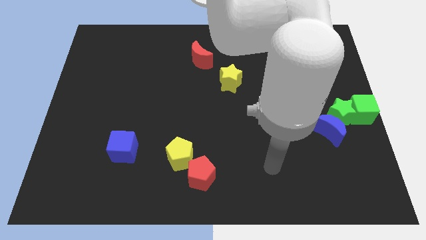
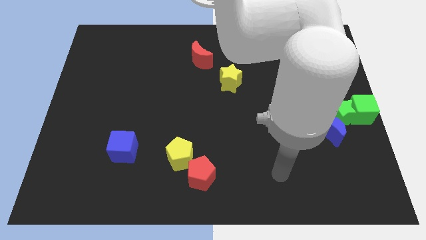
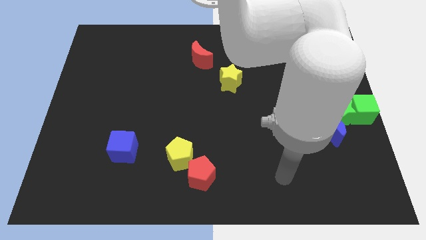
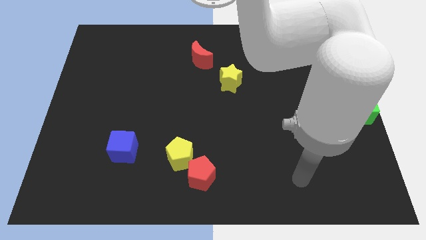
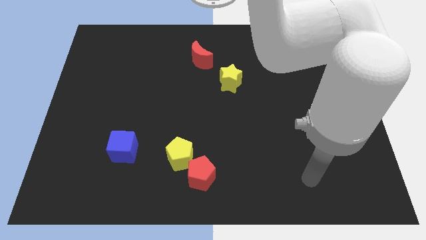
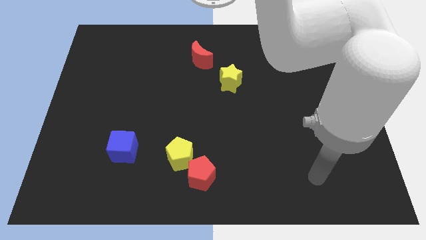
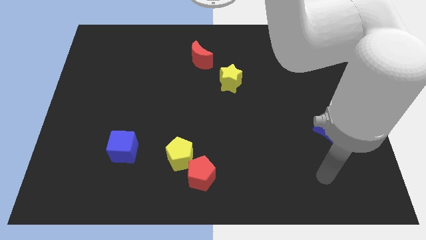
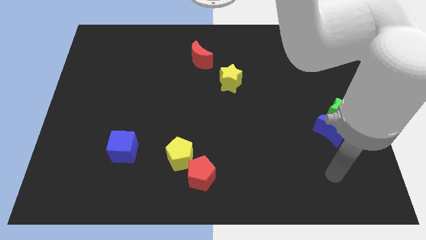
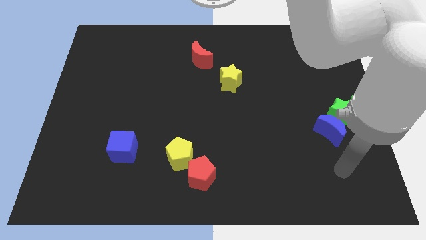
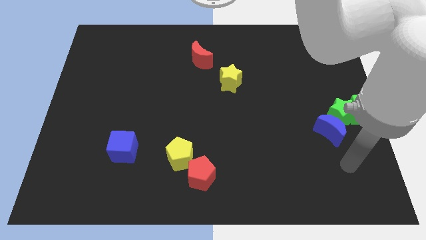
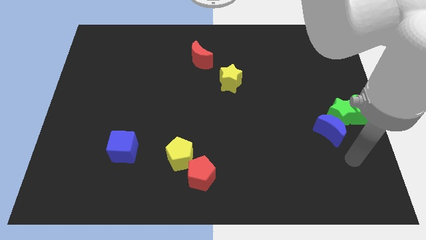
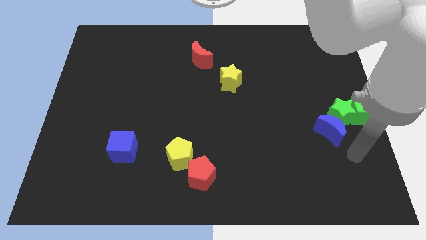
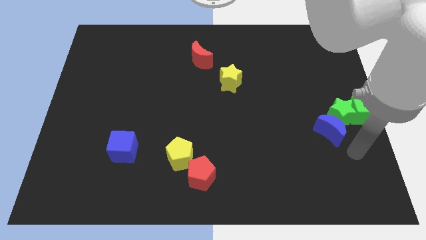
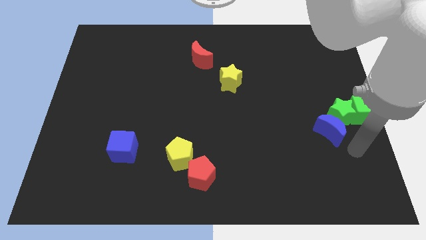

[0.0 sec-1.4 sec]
move the hand at the bottom of the green star

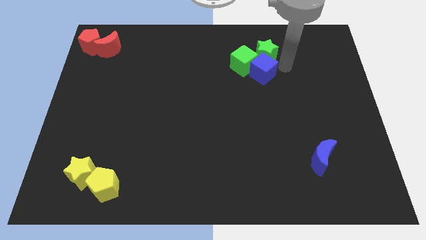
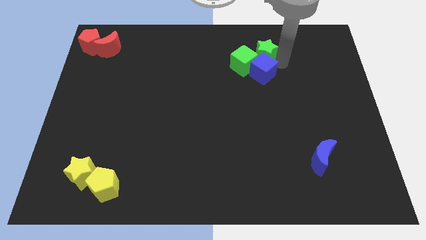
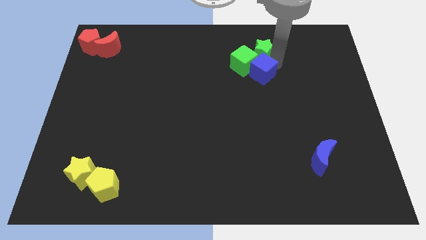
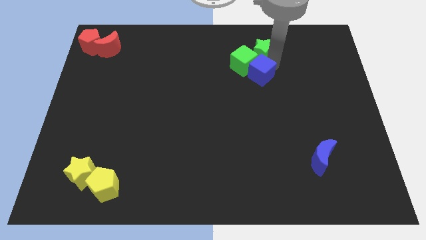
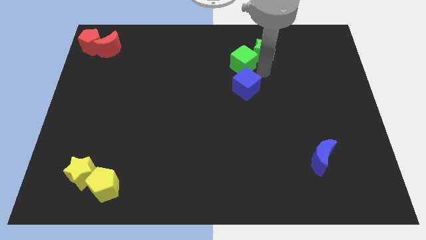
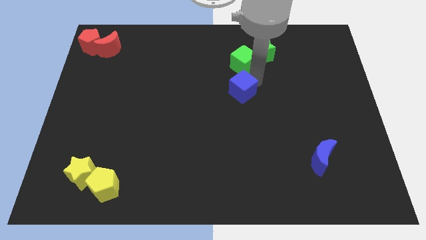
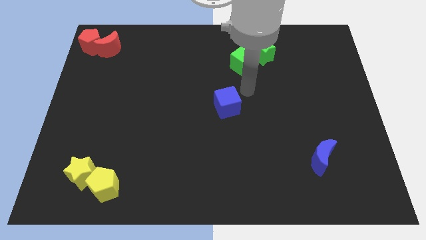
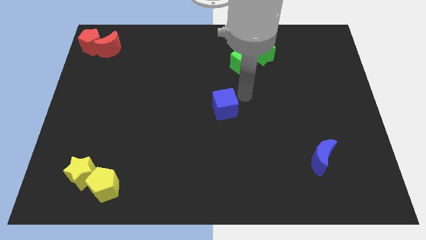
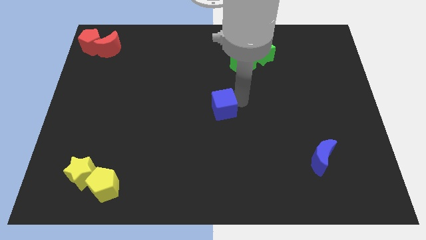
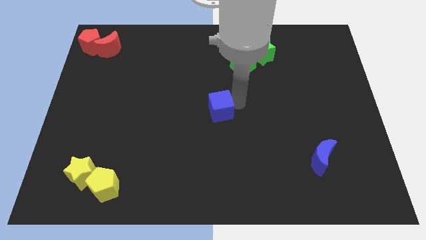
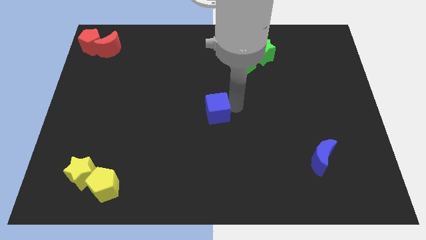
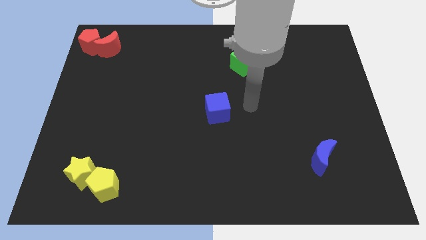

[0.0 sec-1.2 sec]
push the blue cube to the center of the board

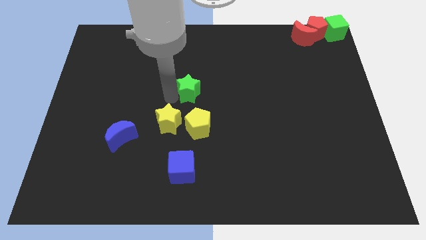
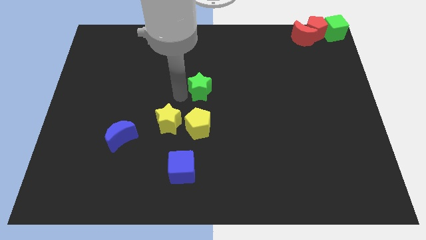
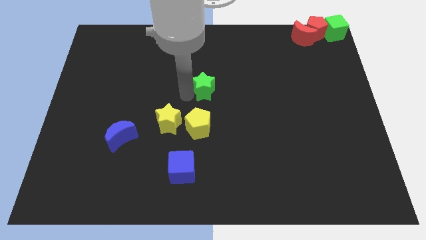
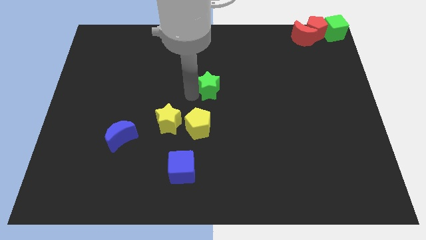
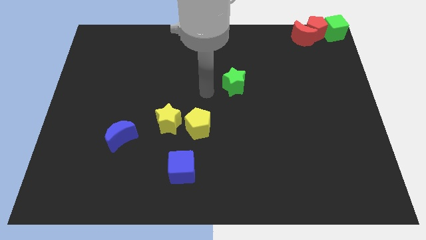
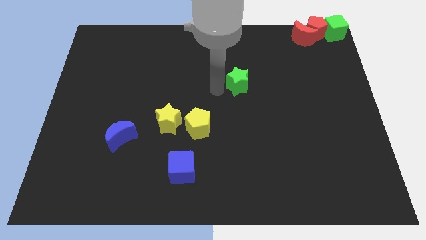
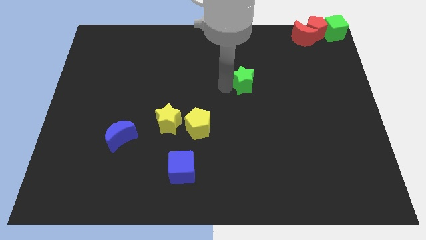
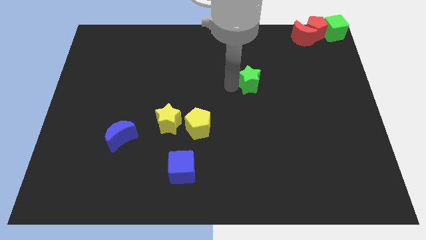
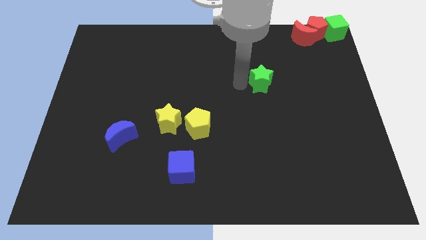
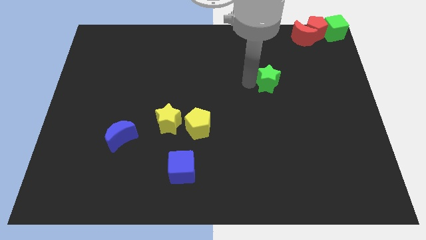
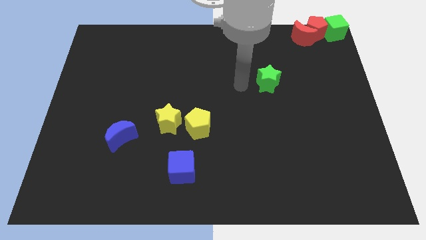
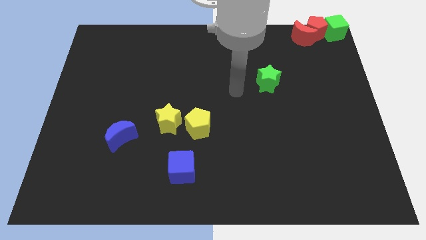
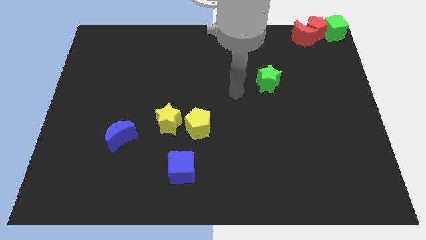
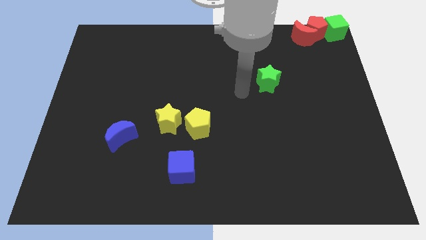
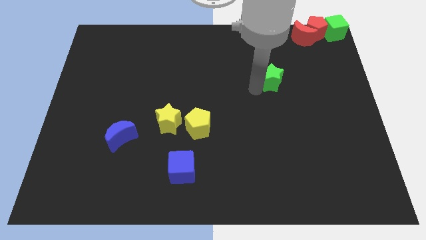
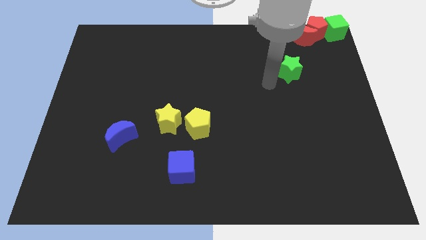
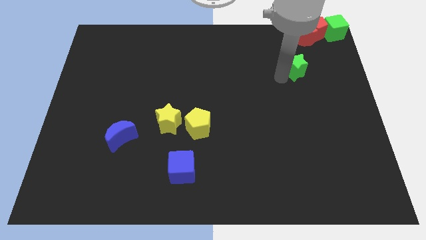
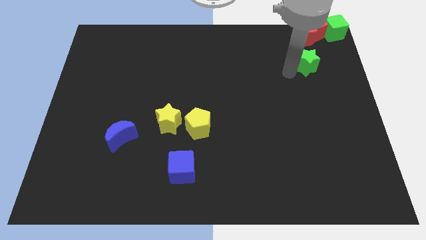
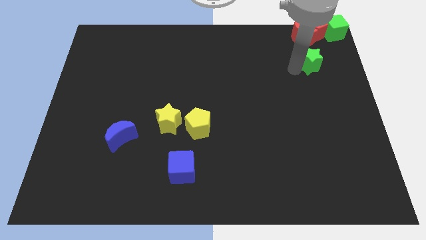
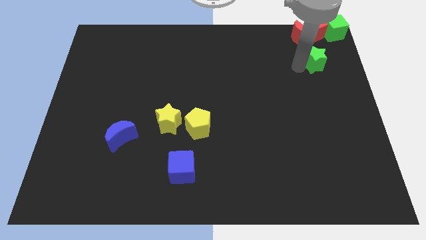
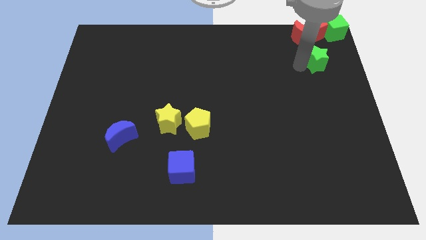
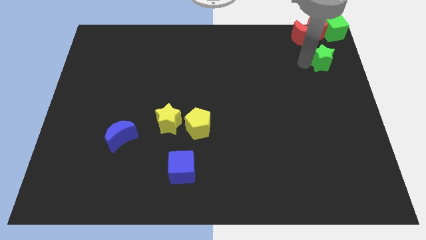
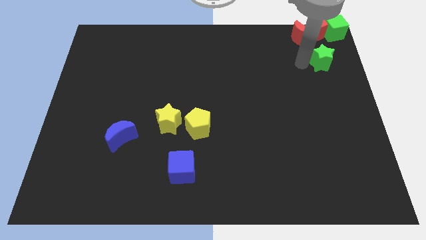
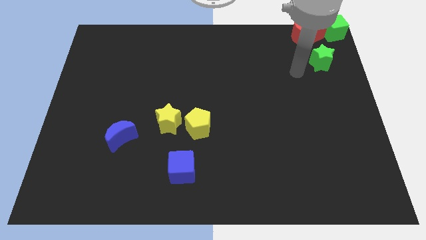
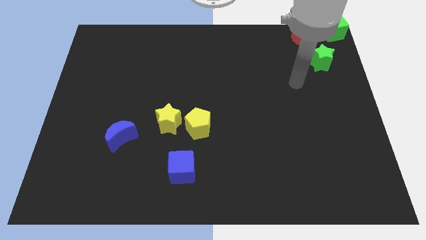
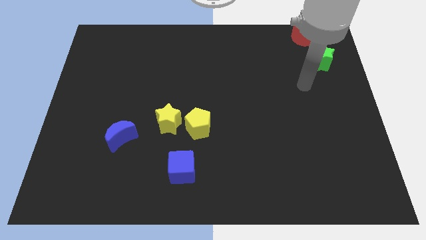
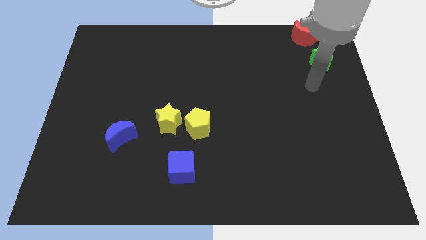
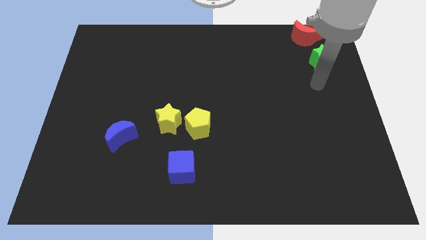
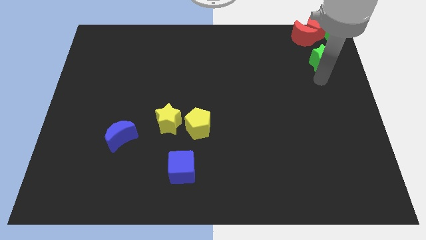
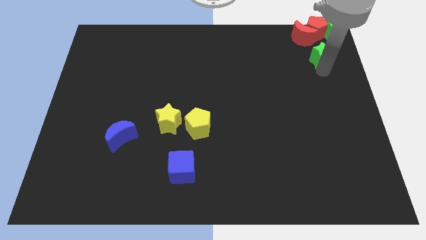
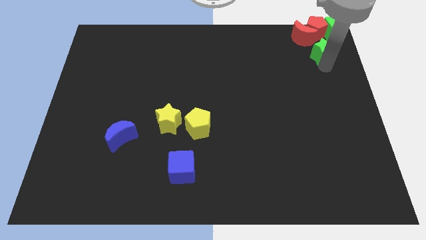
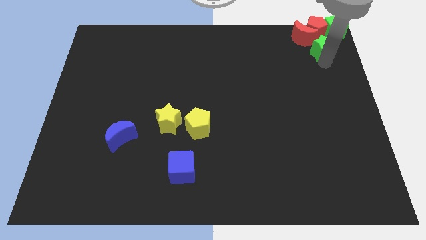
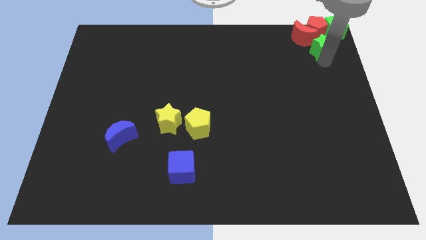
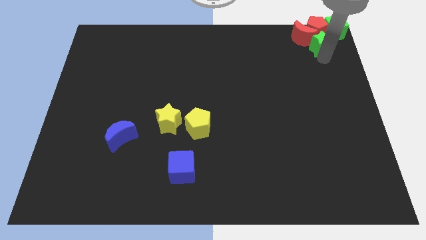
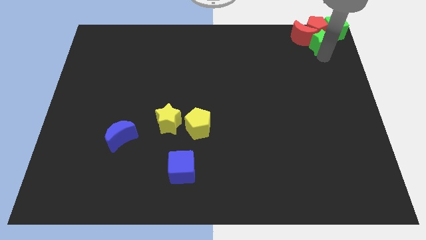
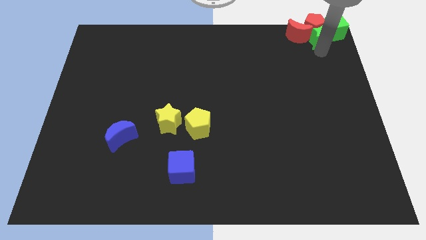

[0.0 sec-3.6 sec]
push green star in to red moon

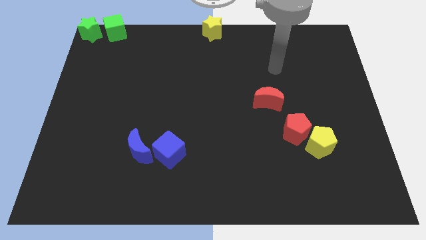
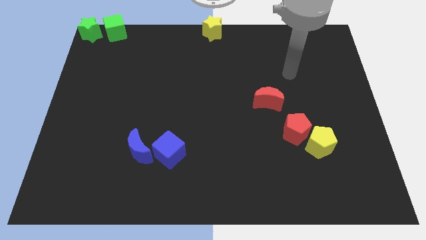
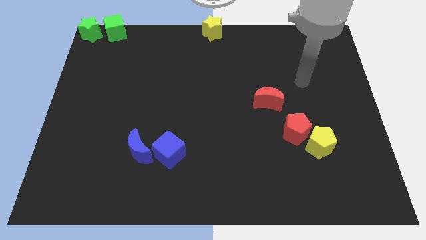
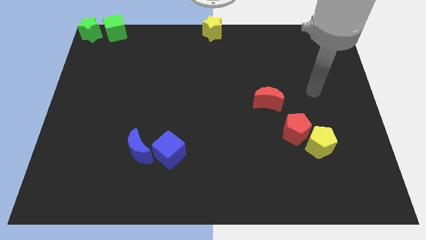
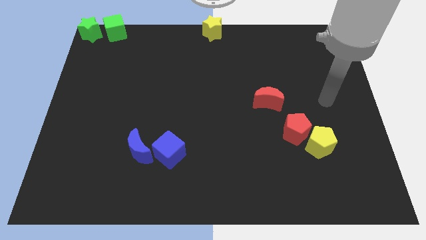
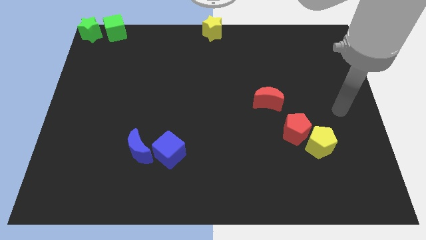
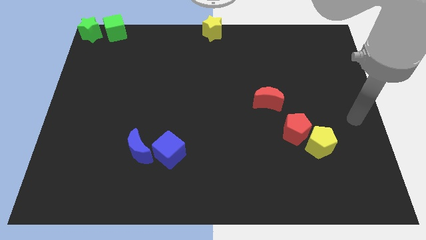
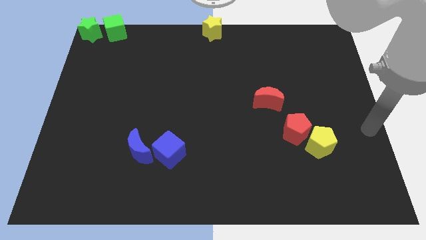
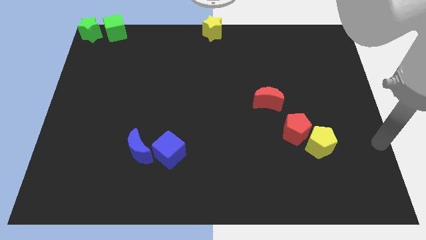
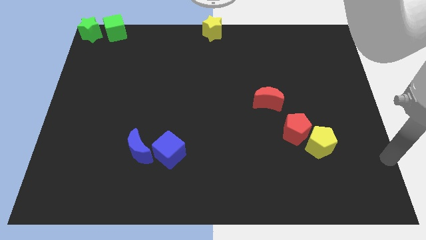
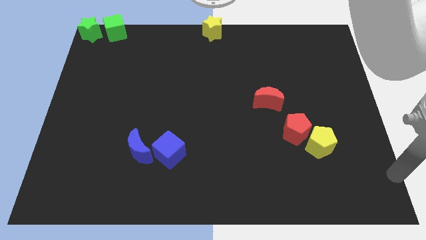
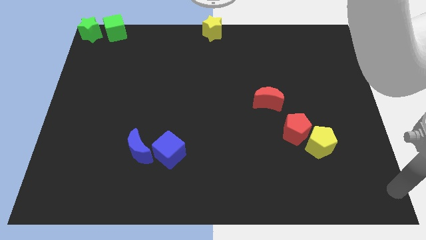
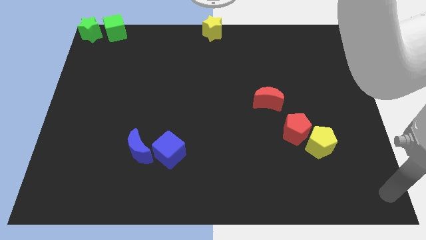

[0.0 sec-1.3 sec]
place your arm to the bottom right corner of the board

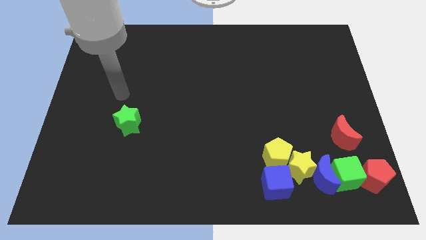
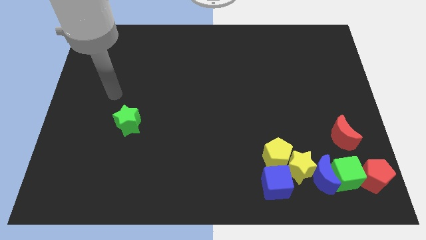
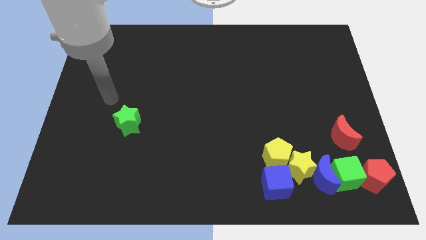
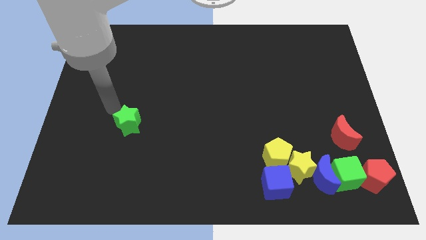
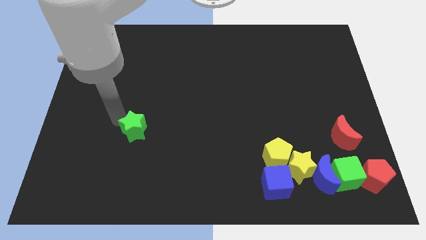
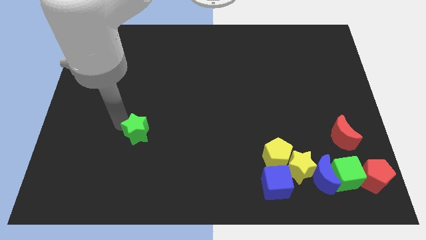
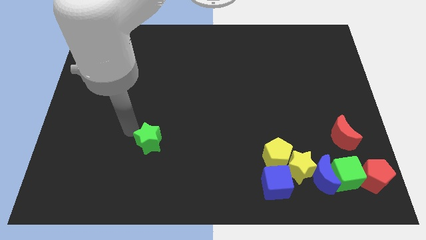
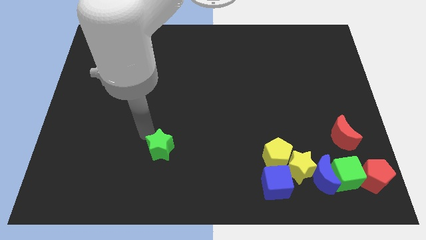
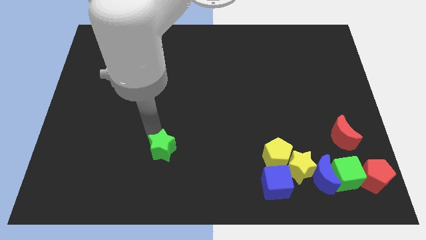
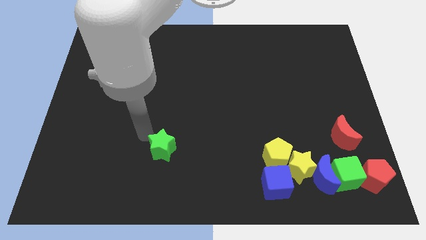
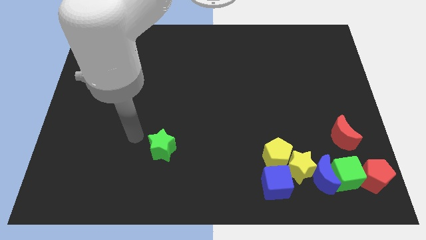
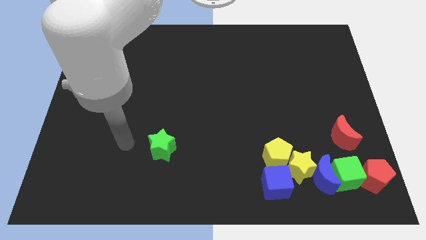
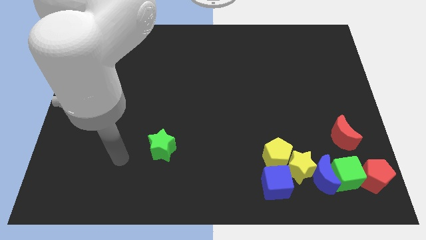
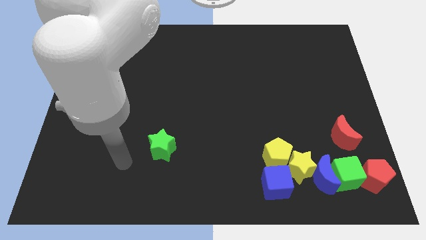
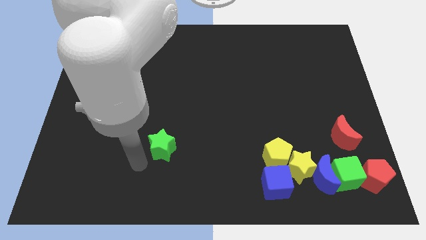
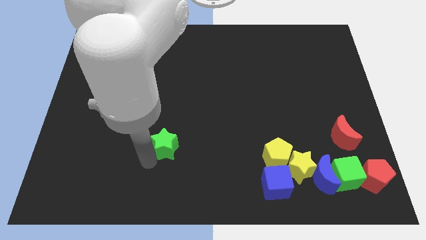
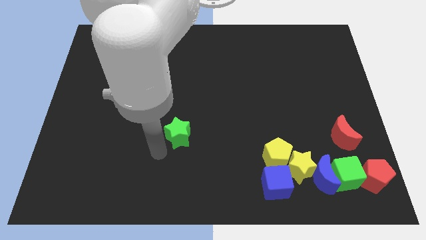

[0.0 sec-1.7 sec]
move the green star diagonally top left to yellow pentagon
